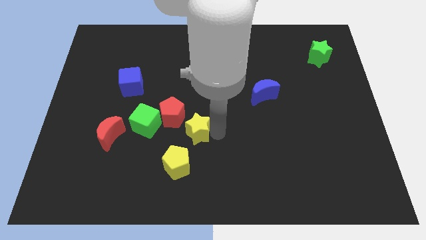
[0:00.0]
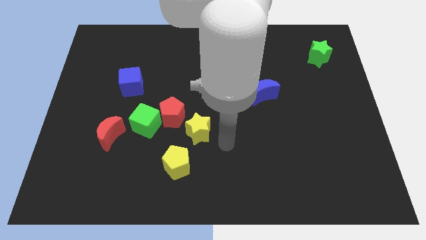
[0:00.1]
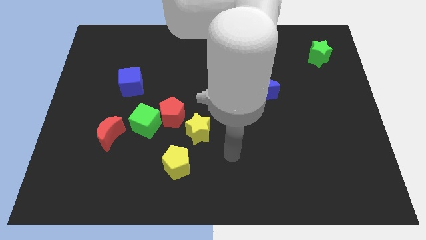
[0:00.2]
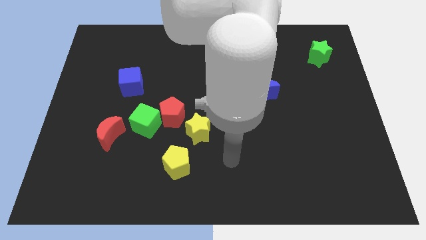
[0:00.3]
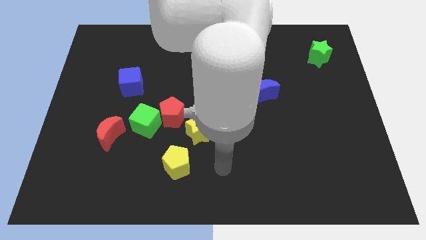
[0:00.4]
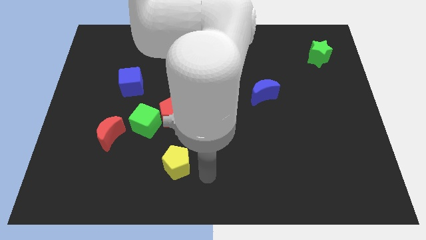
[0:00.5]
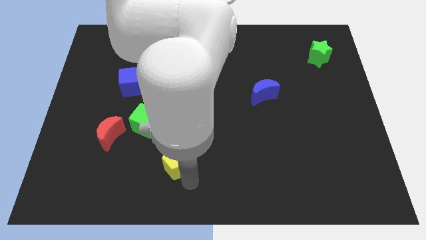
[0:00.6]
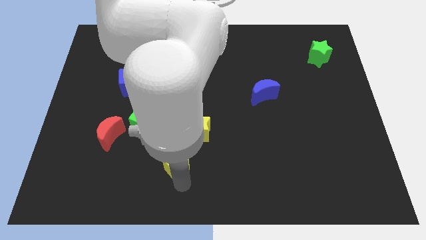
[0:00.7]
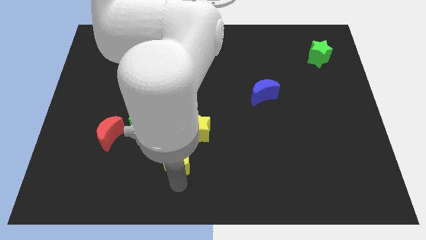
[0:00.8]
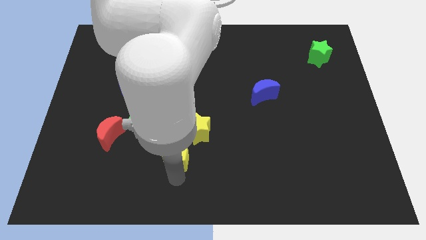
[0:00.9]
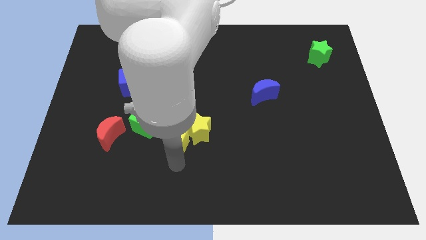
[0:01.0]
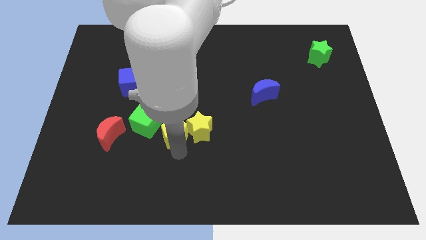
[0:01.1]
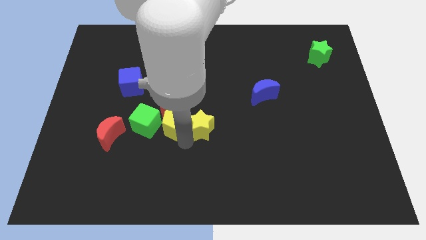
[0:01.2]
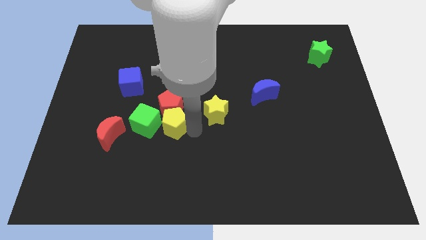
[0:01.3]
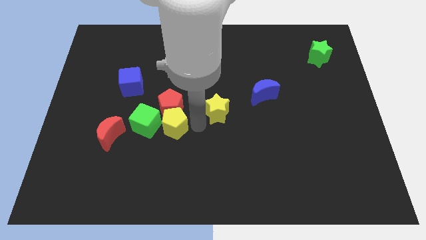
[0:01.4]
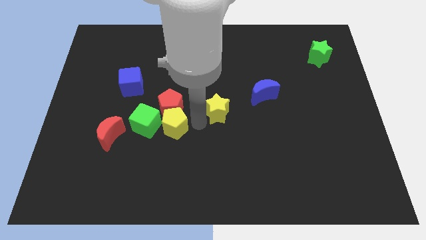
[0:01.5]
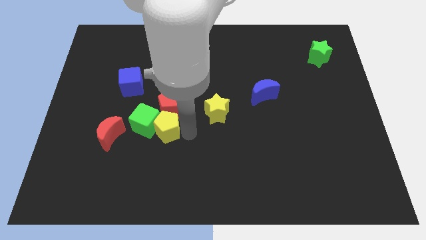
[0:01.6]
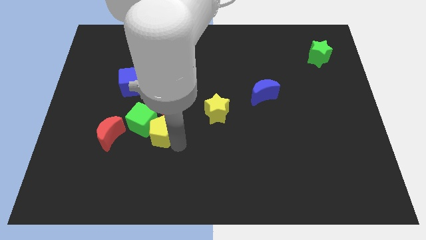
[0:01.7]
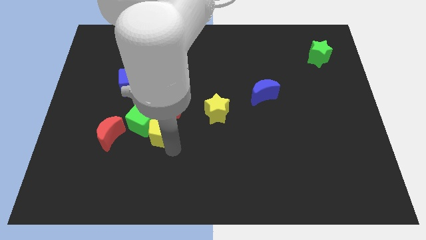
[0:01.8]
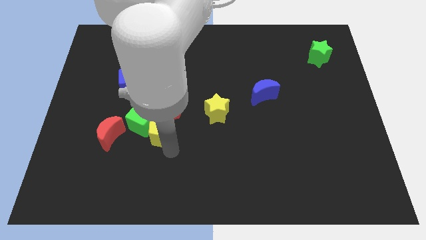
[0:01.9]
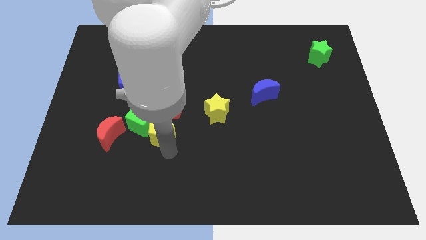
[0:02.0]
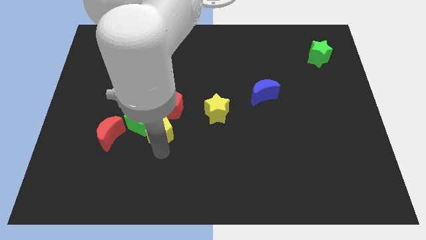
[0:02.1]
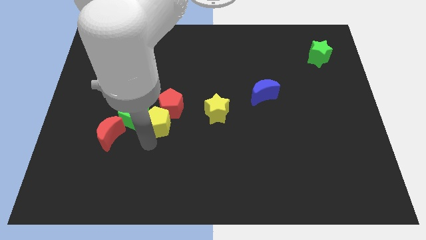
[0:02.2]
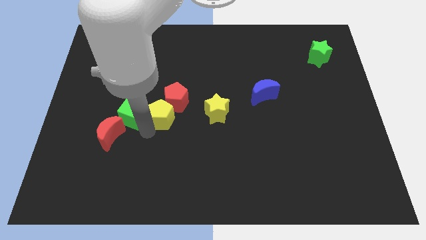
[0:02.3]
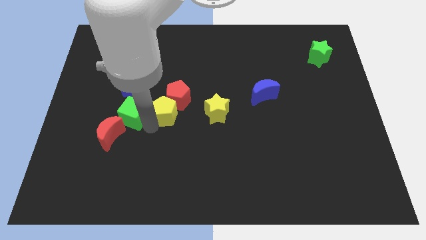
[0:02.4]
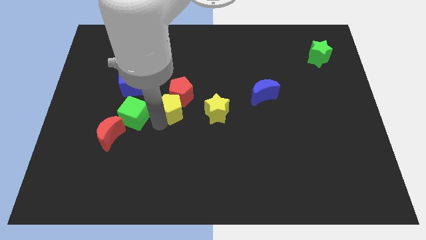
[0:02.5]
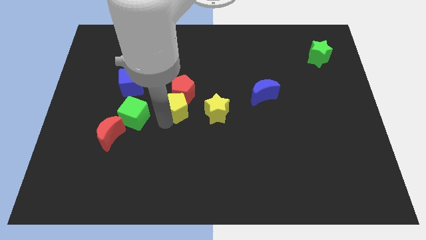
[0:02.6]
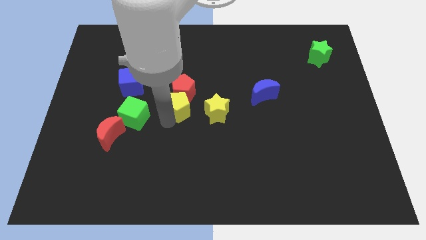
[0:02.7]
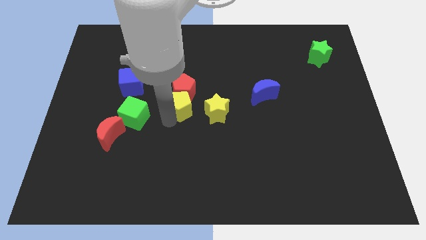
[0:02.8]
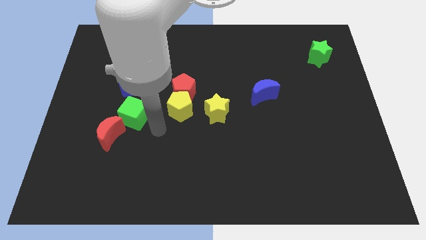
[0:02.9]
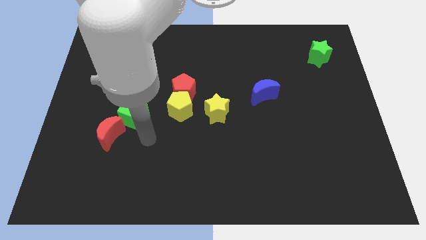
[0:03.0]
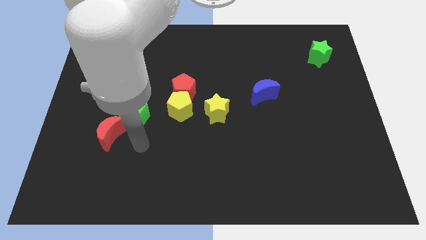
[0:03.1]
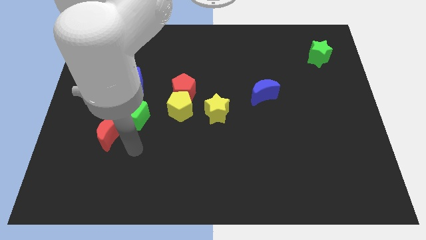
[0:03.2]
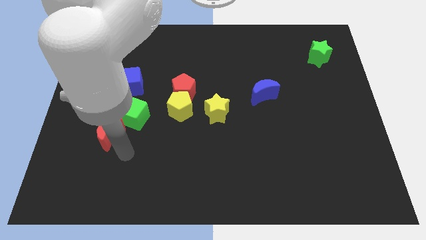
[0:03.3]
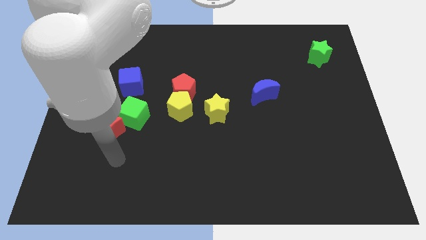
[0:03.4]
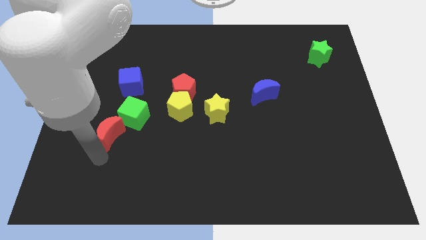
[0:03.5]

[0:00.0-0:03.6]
place the yellow star to the right of the yellow pentagon

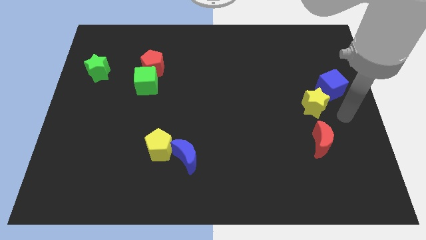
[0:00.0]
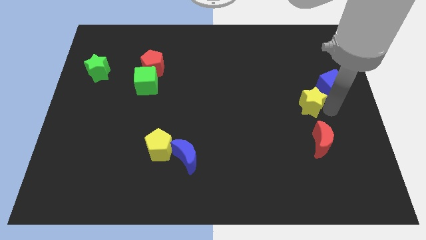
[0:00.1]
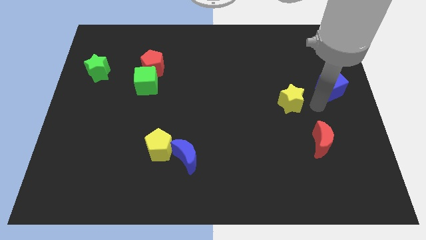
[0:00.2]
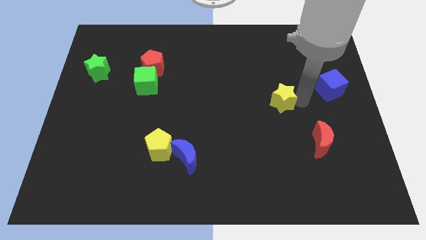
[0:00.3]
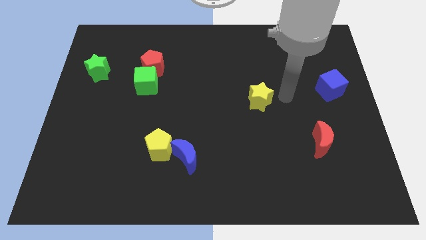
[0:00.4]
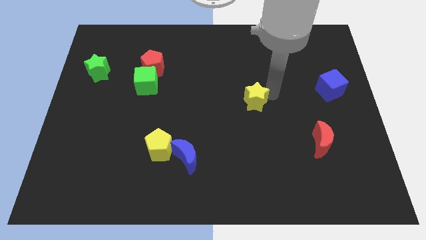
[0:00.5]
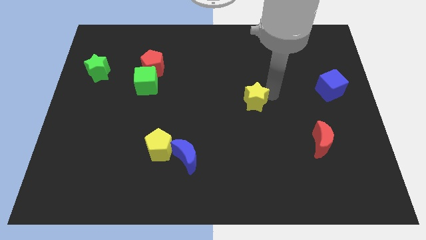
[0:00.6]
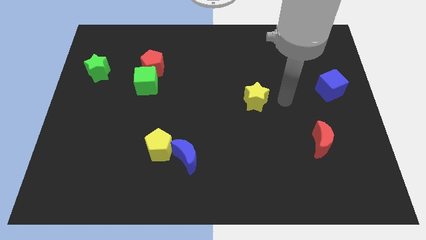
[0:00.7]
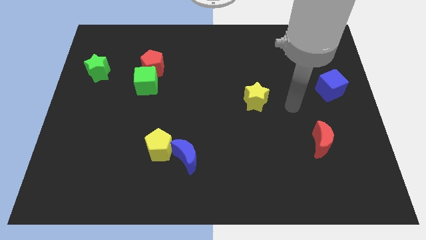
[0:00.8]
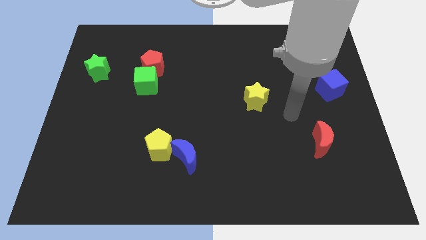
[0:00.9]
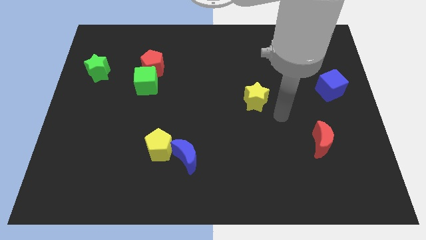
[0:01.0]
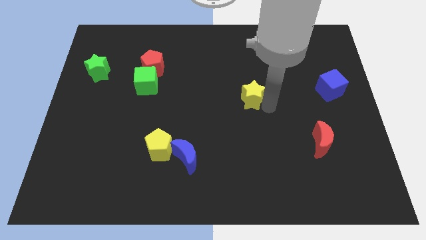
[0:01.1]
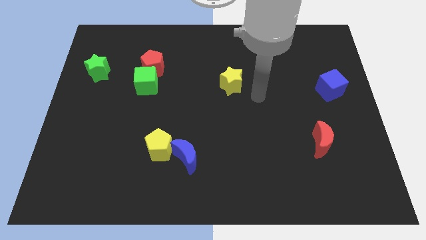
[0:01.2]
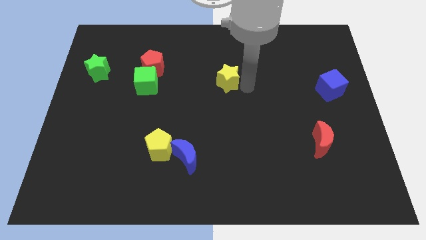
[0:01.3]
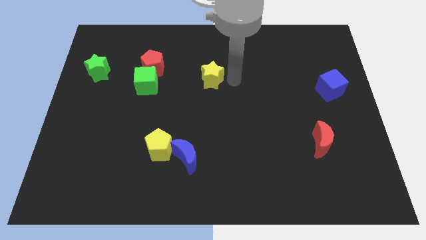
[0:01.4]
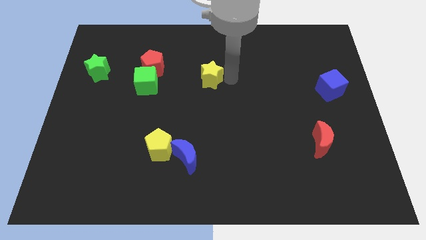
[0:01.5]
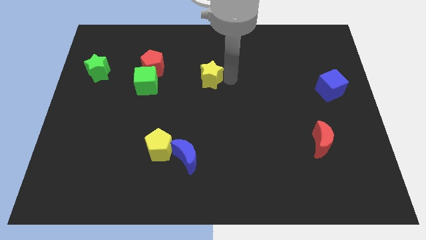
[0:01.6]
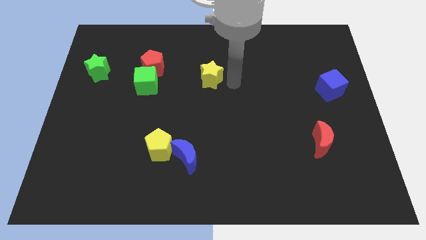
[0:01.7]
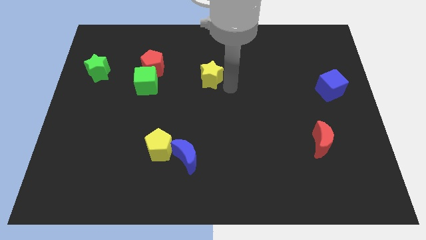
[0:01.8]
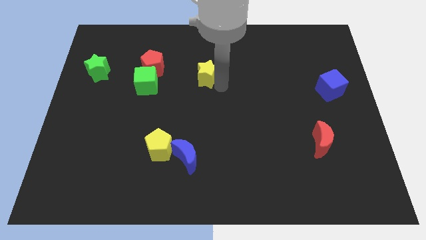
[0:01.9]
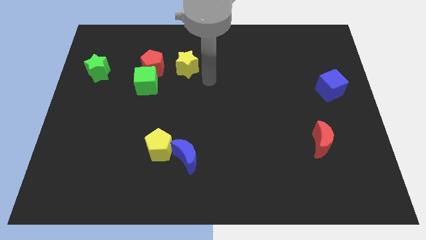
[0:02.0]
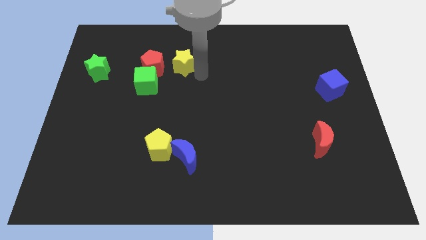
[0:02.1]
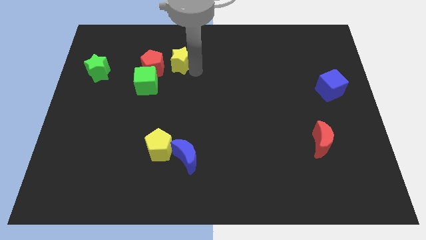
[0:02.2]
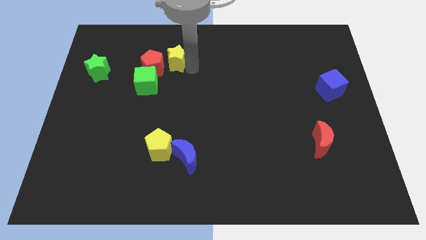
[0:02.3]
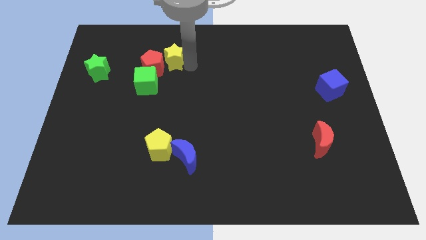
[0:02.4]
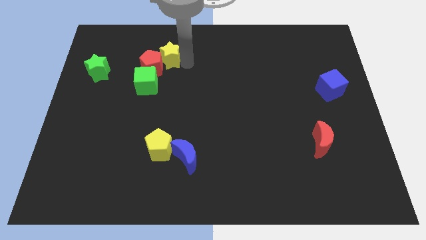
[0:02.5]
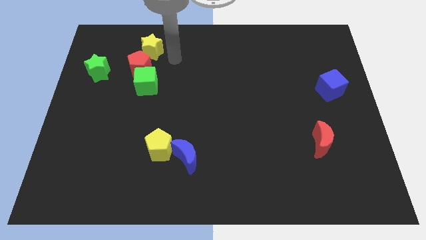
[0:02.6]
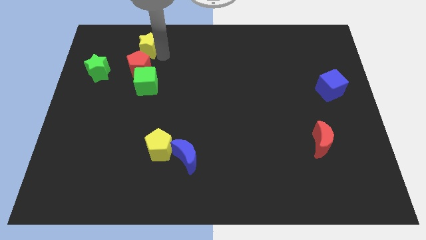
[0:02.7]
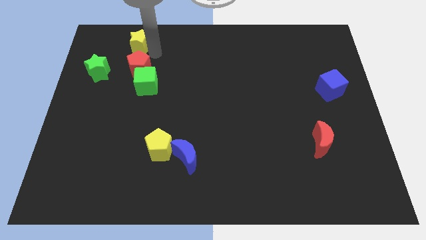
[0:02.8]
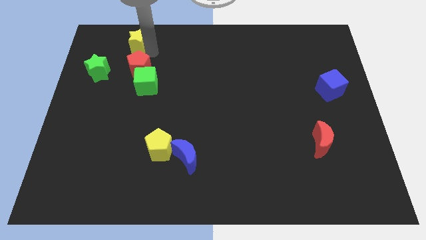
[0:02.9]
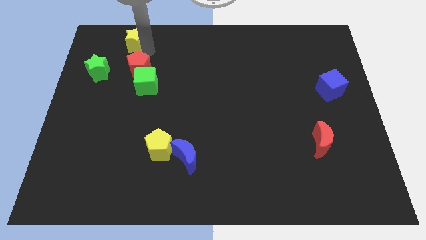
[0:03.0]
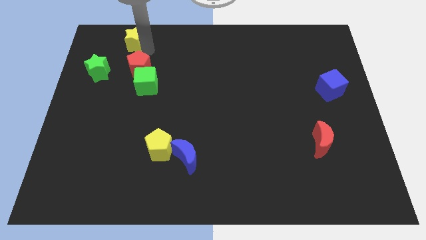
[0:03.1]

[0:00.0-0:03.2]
push the yellow star to the top of the red pentagon

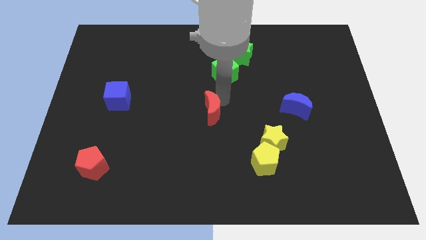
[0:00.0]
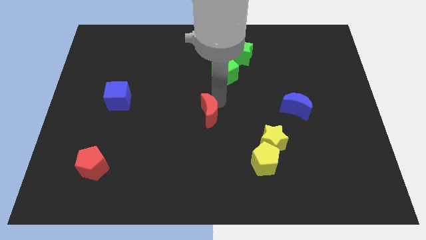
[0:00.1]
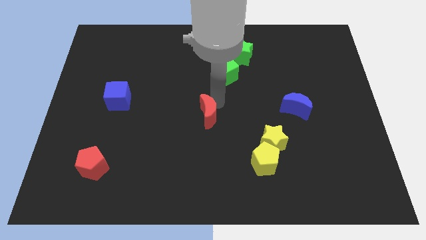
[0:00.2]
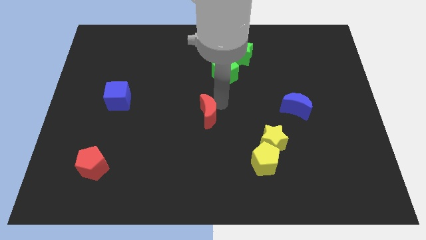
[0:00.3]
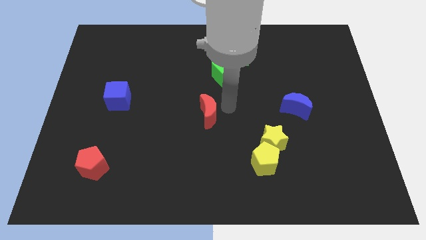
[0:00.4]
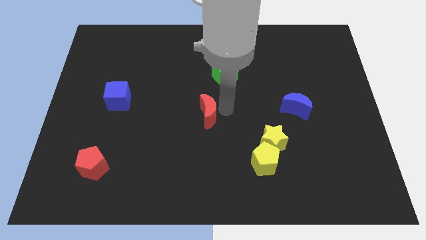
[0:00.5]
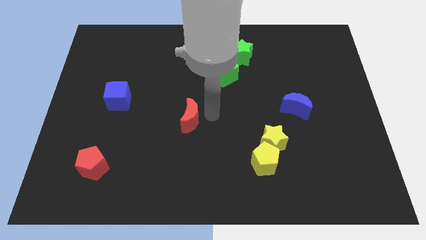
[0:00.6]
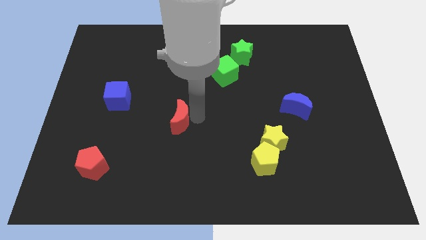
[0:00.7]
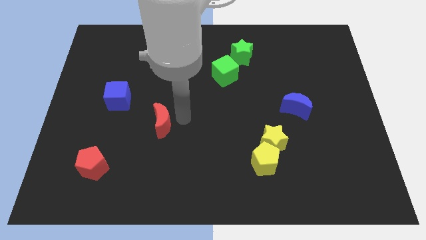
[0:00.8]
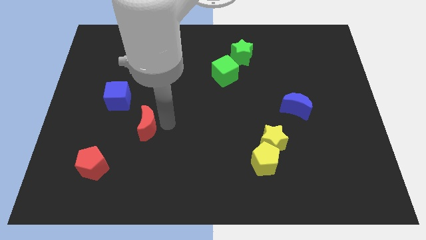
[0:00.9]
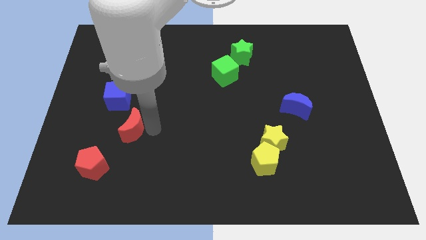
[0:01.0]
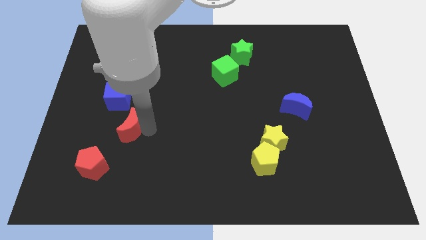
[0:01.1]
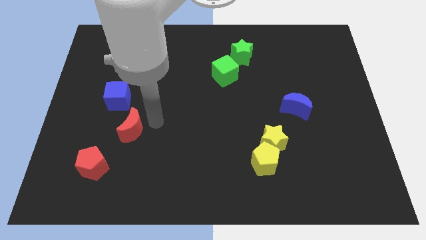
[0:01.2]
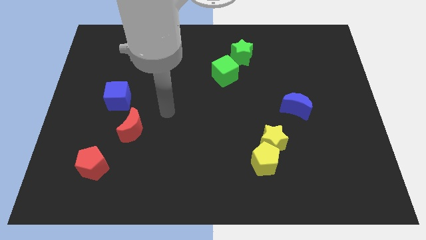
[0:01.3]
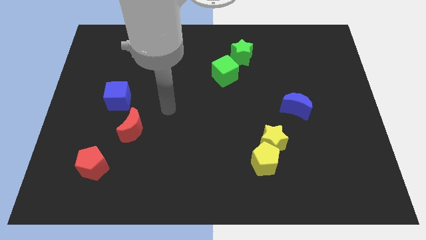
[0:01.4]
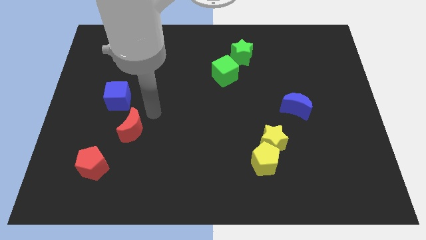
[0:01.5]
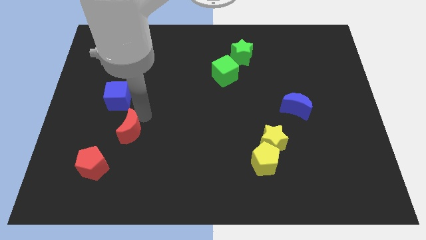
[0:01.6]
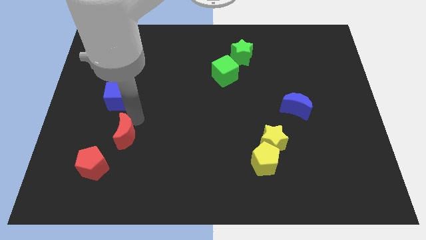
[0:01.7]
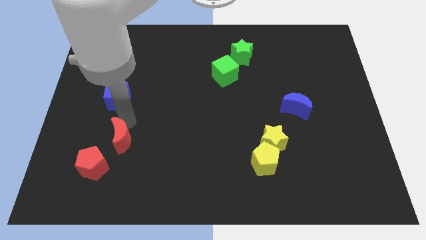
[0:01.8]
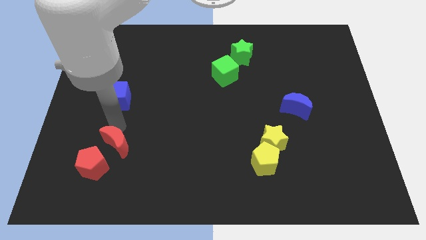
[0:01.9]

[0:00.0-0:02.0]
push the red moon close to the red pentagon

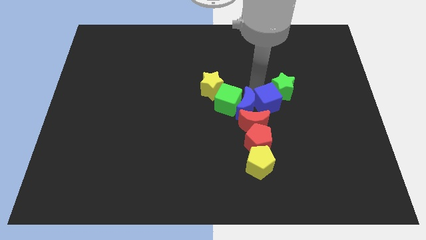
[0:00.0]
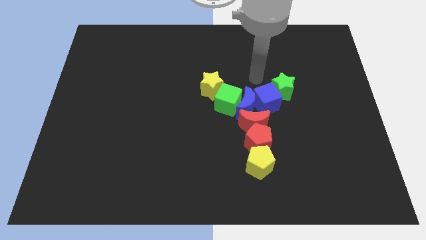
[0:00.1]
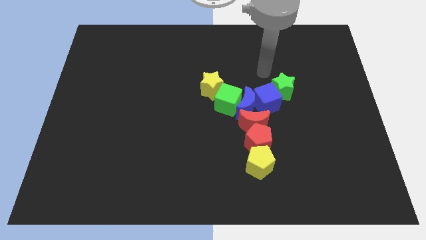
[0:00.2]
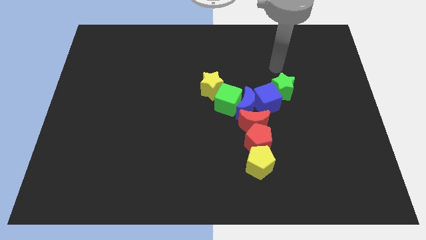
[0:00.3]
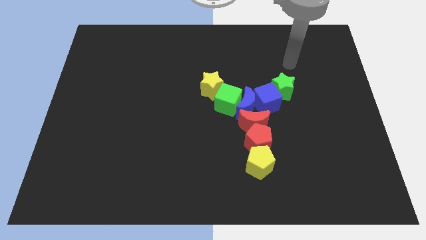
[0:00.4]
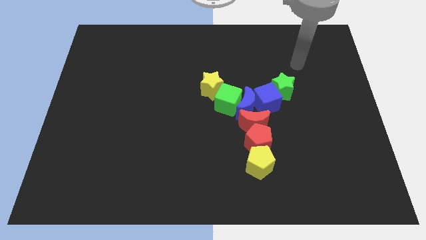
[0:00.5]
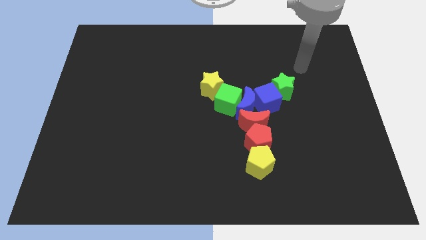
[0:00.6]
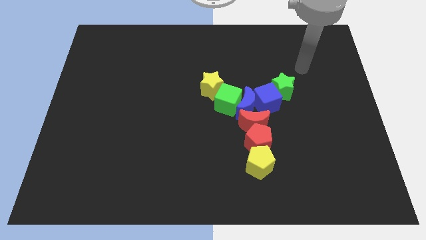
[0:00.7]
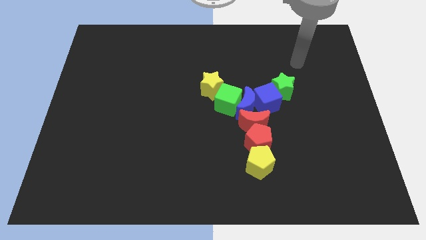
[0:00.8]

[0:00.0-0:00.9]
move the arm away from the blue cube
